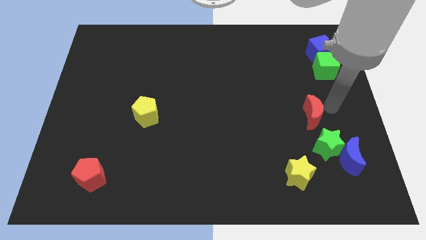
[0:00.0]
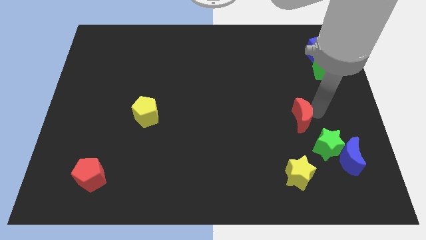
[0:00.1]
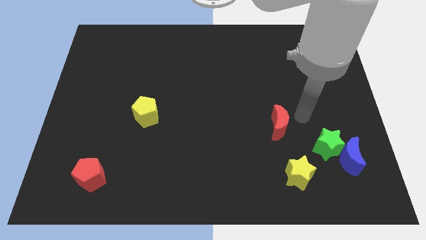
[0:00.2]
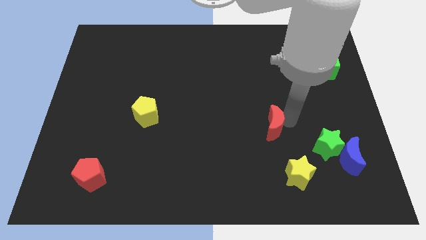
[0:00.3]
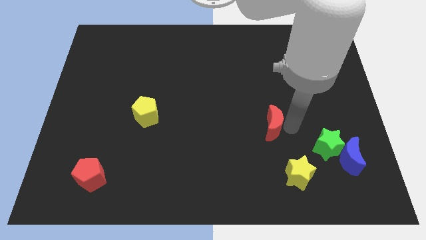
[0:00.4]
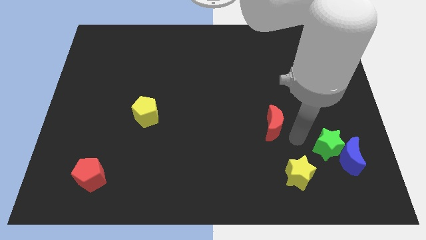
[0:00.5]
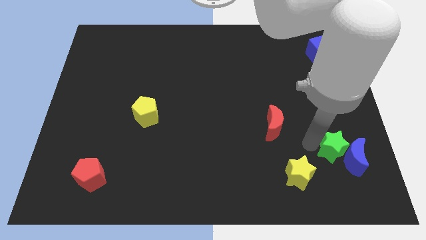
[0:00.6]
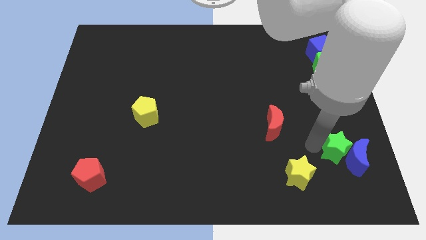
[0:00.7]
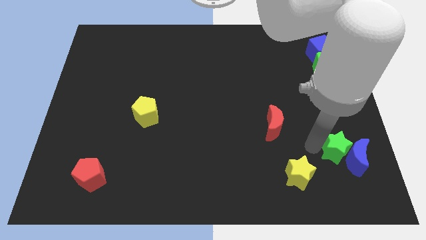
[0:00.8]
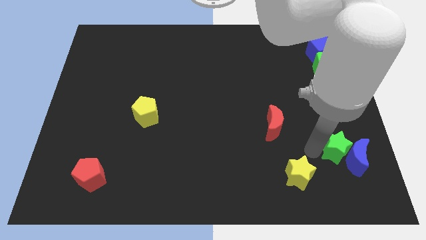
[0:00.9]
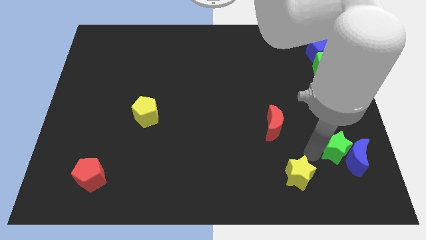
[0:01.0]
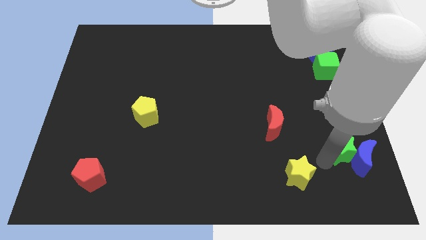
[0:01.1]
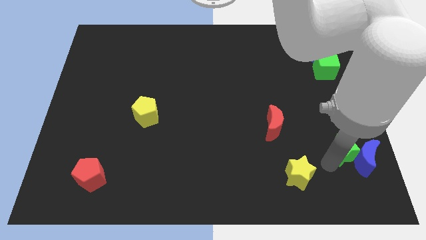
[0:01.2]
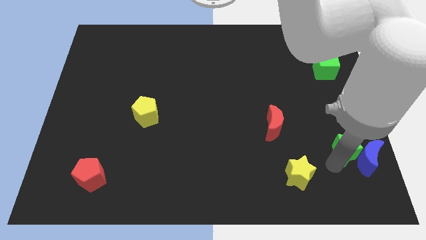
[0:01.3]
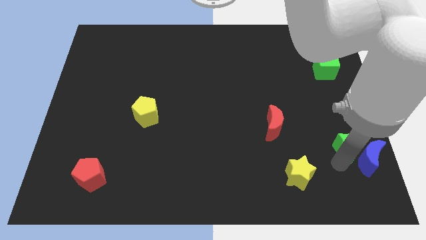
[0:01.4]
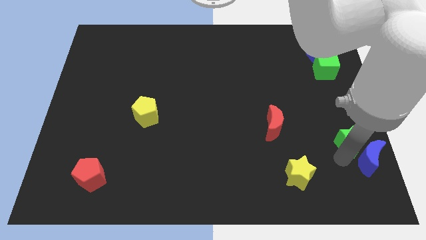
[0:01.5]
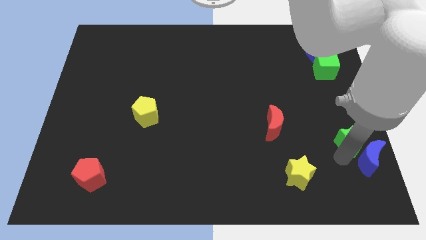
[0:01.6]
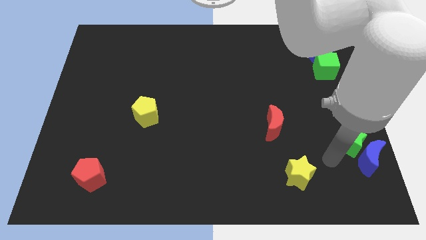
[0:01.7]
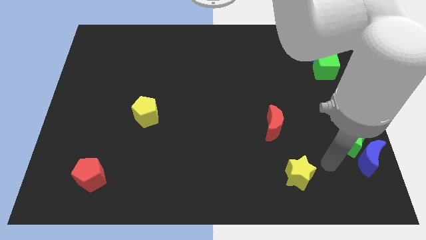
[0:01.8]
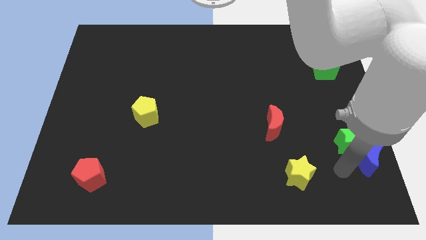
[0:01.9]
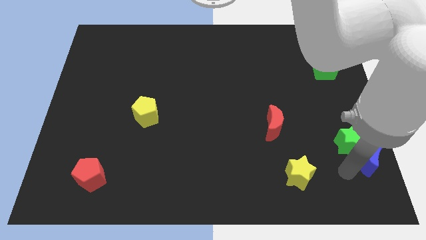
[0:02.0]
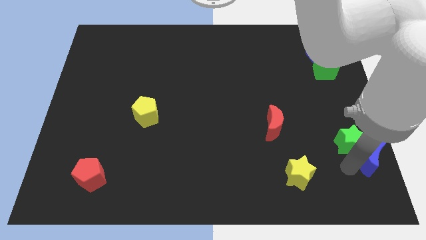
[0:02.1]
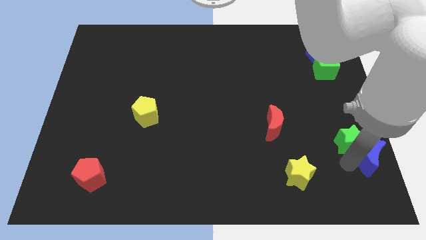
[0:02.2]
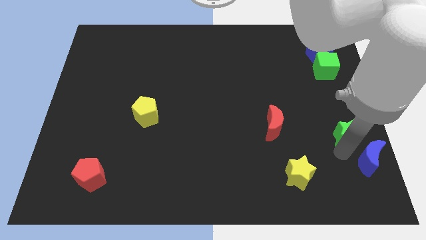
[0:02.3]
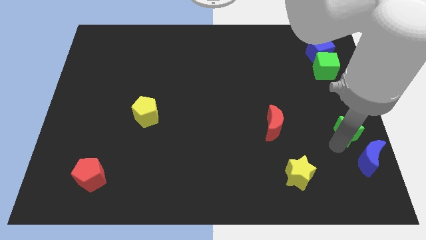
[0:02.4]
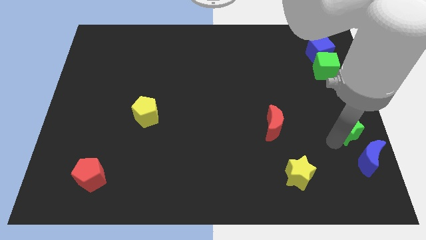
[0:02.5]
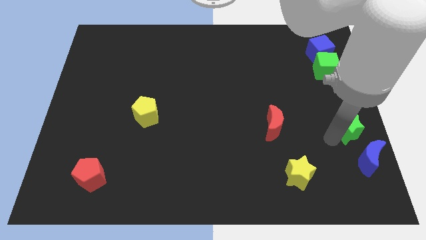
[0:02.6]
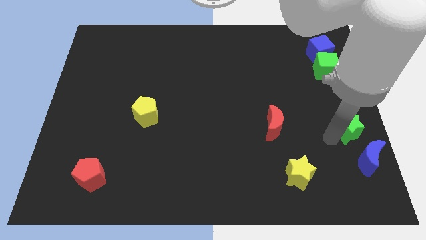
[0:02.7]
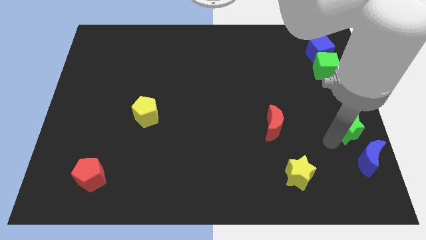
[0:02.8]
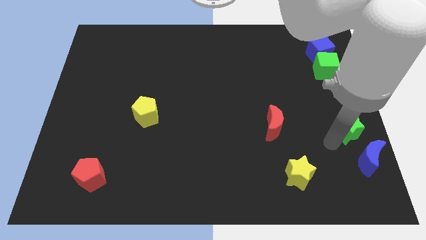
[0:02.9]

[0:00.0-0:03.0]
move green star towards the green block

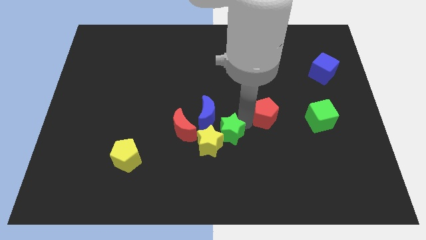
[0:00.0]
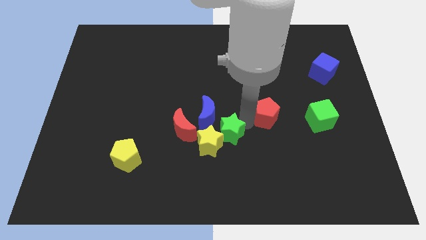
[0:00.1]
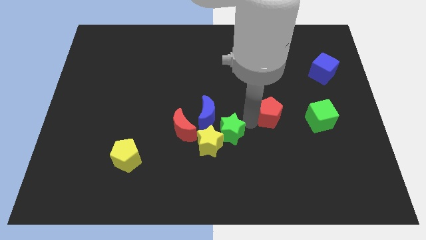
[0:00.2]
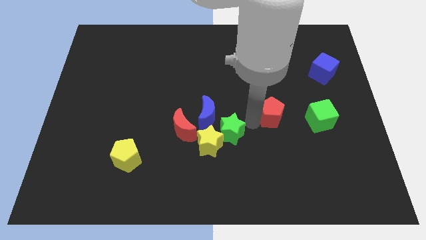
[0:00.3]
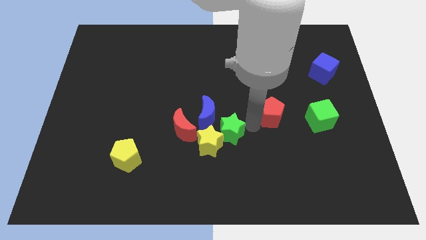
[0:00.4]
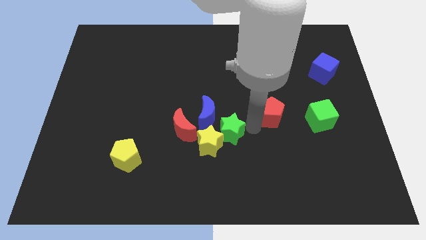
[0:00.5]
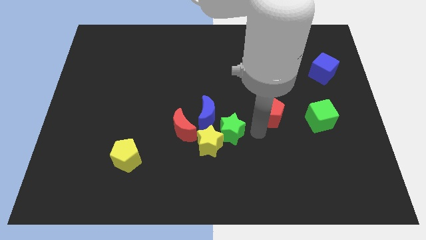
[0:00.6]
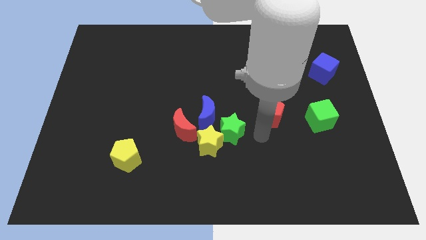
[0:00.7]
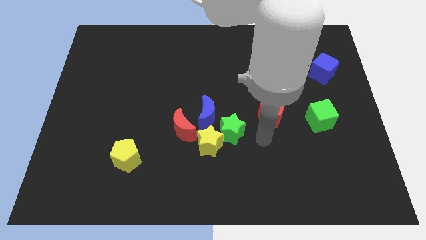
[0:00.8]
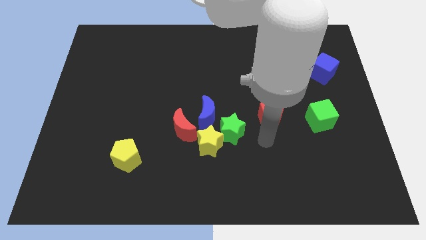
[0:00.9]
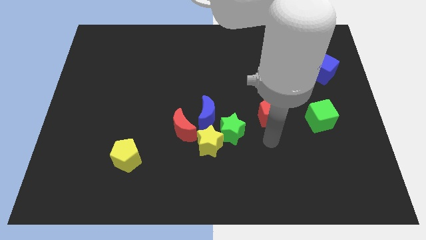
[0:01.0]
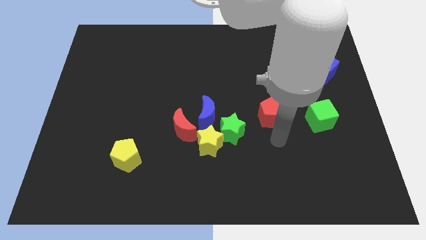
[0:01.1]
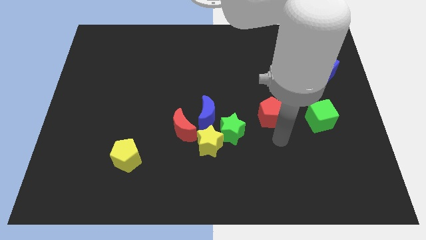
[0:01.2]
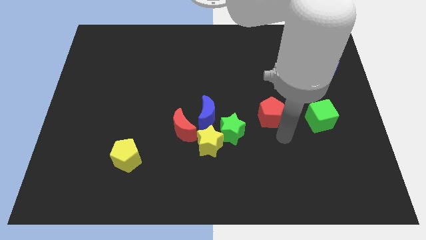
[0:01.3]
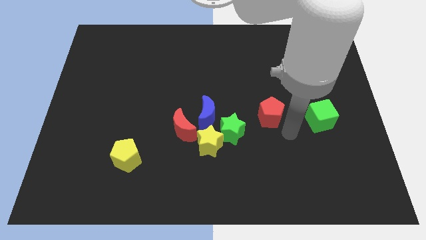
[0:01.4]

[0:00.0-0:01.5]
push the red pentagon slightly to the right side of the board

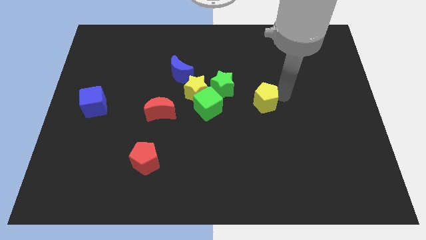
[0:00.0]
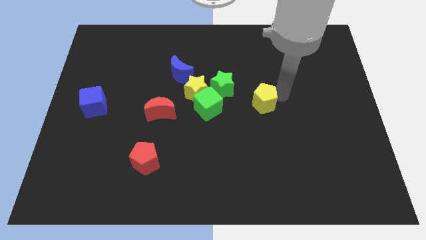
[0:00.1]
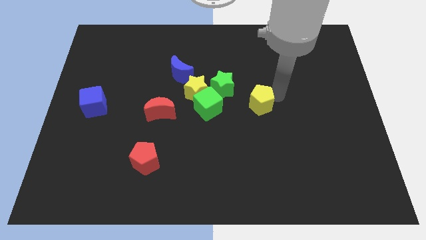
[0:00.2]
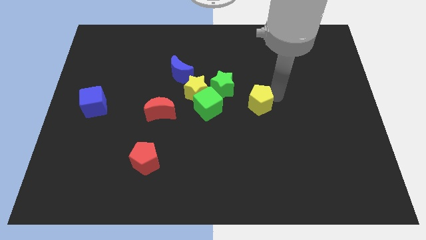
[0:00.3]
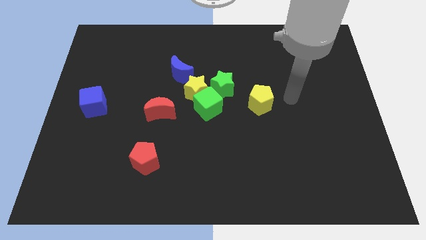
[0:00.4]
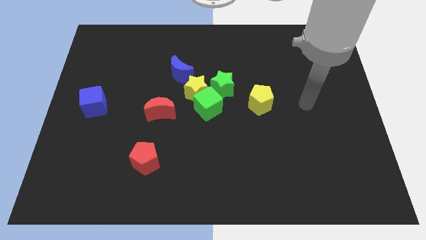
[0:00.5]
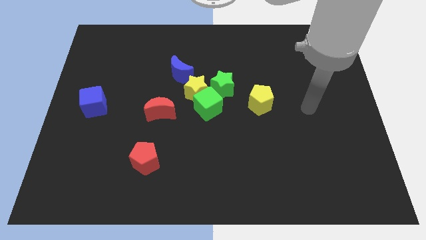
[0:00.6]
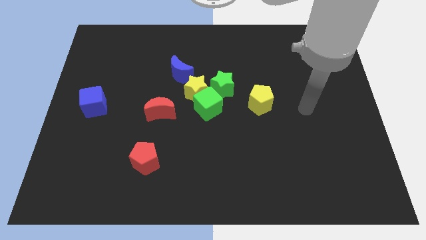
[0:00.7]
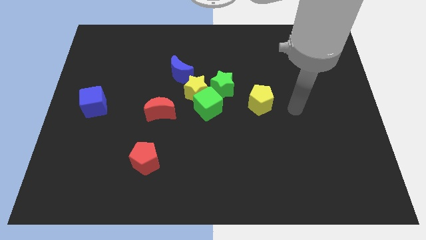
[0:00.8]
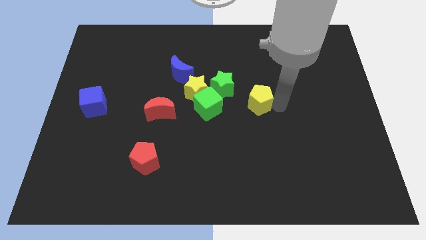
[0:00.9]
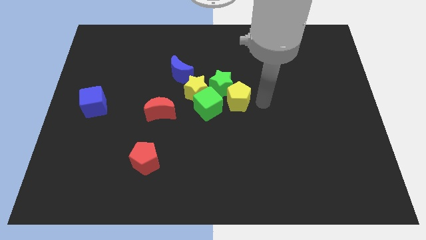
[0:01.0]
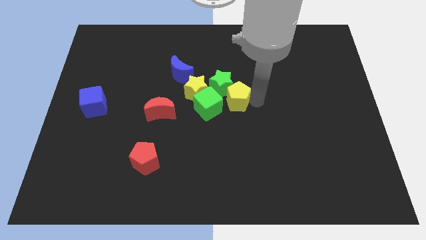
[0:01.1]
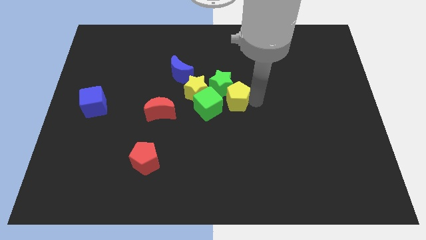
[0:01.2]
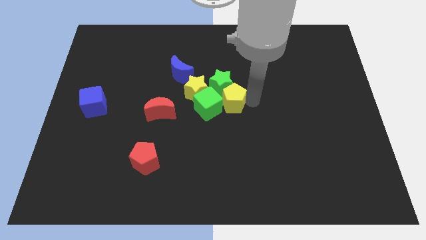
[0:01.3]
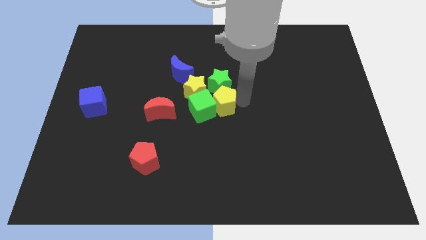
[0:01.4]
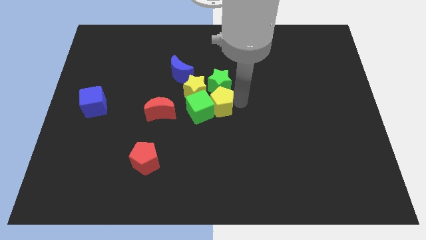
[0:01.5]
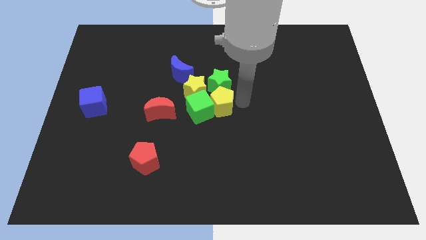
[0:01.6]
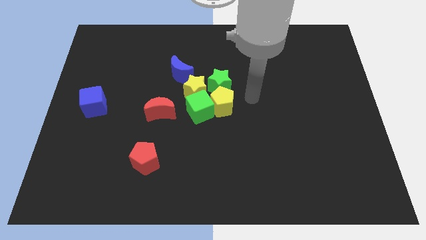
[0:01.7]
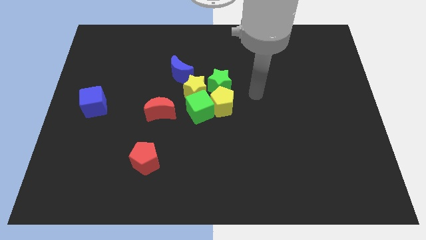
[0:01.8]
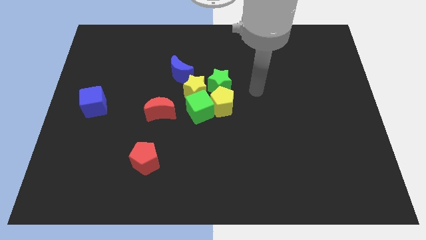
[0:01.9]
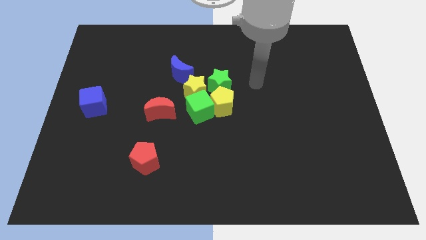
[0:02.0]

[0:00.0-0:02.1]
move yellow pentagon towards the green cube and green star

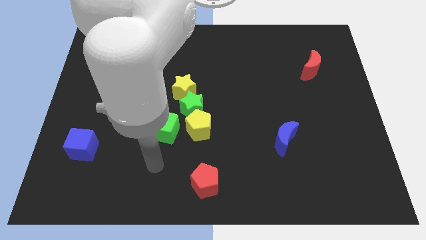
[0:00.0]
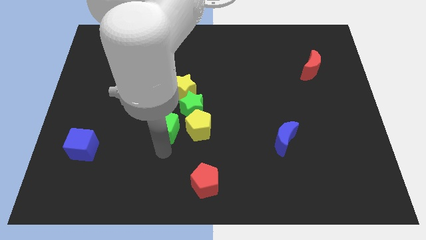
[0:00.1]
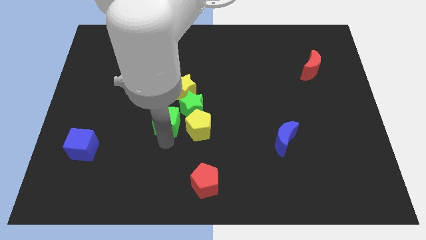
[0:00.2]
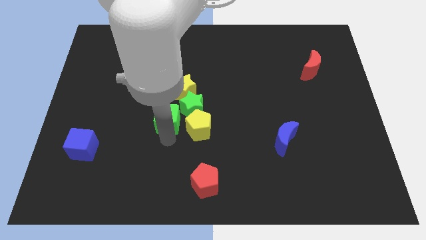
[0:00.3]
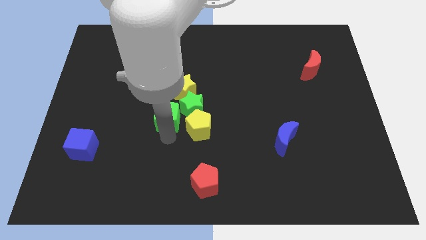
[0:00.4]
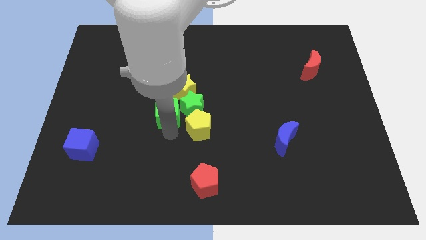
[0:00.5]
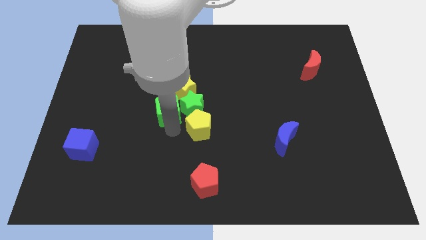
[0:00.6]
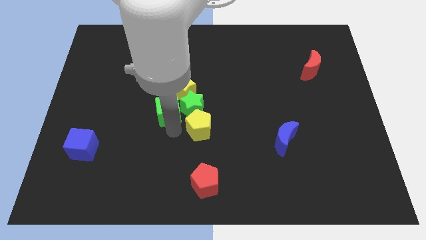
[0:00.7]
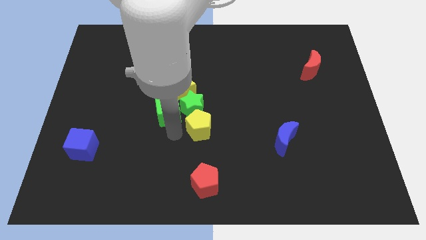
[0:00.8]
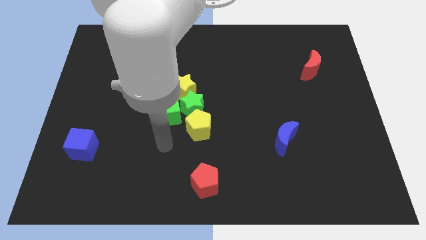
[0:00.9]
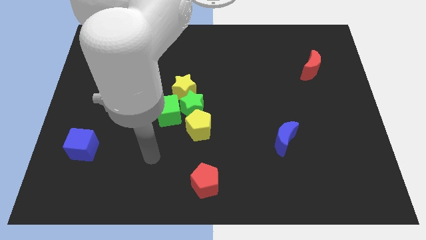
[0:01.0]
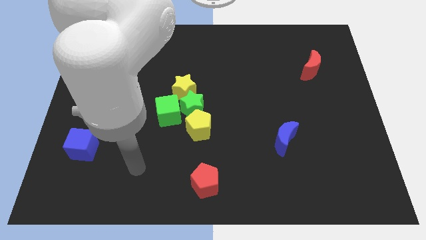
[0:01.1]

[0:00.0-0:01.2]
push the green cube to the left of green star

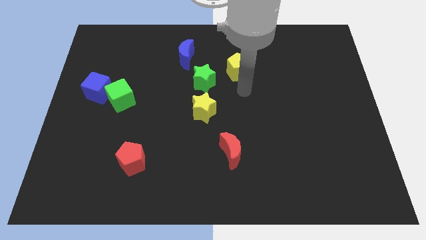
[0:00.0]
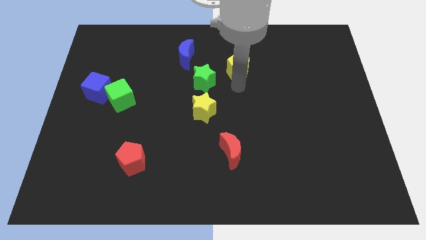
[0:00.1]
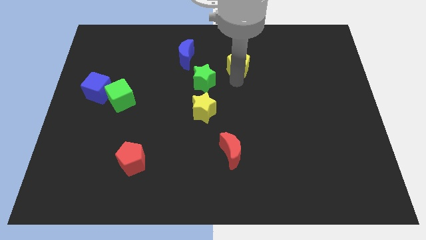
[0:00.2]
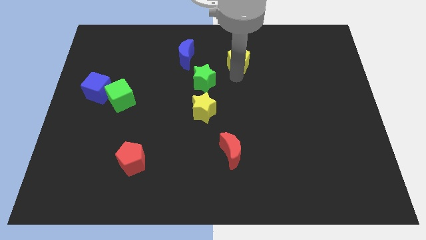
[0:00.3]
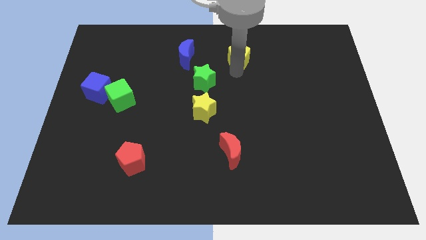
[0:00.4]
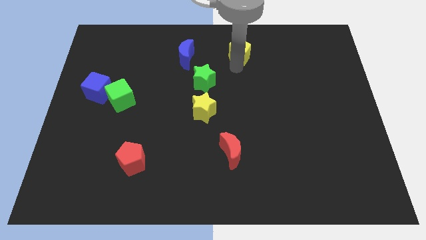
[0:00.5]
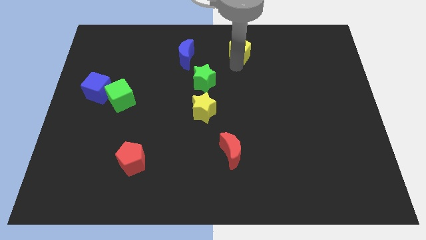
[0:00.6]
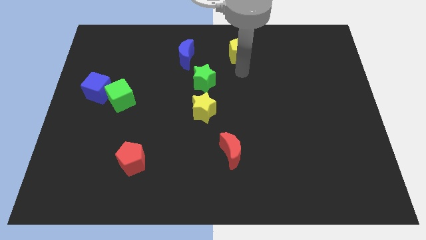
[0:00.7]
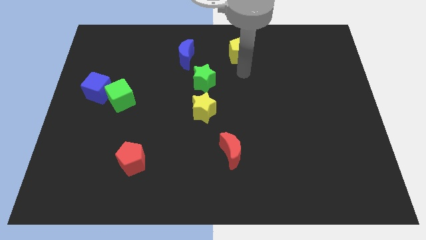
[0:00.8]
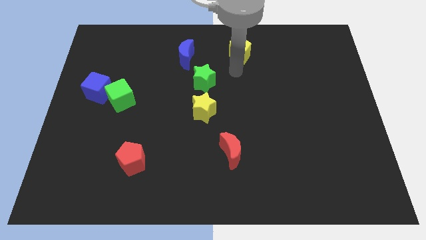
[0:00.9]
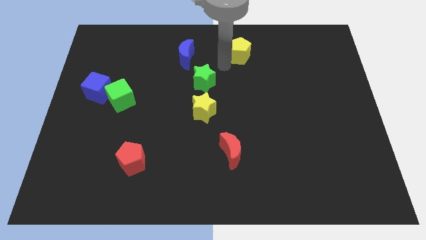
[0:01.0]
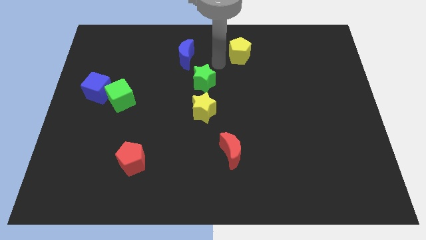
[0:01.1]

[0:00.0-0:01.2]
push yellow pentagon to the top center of the board
